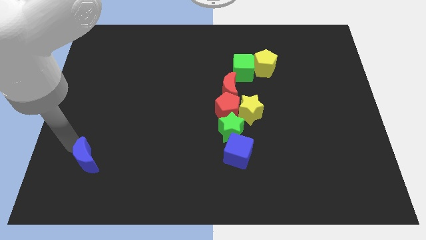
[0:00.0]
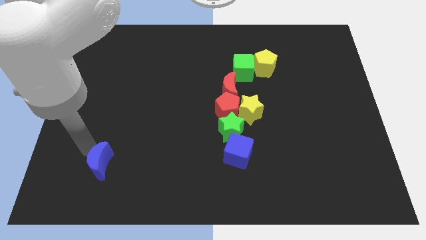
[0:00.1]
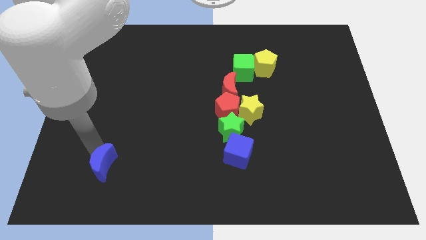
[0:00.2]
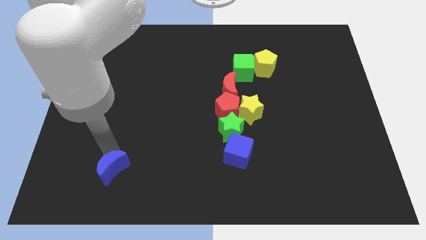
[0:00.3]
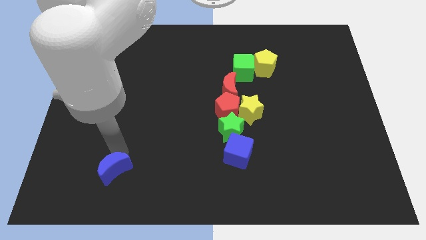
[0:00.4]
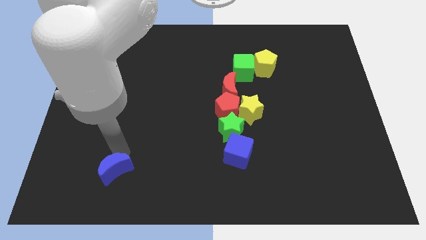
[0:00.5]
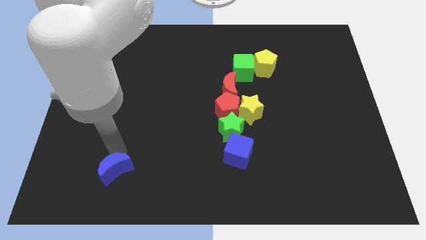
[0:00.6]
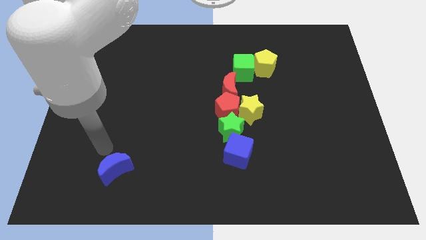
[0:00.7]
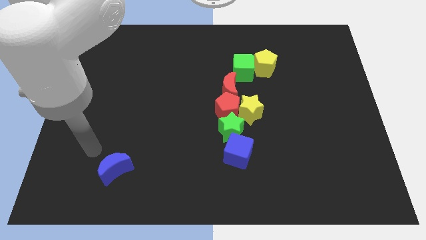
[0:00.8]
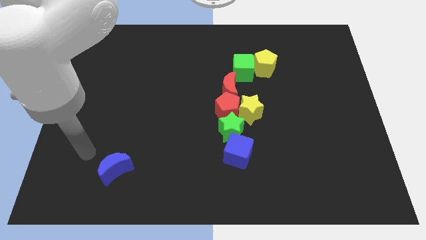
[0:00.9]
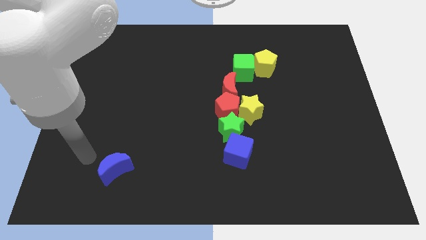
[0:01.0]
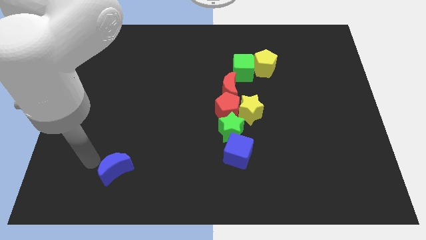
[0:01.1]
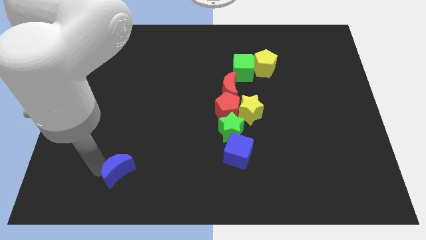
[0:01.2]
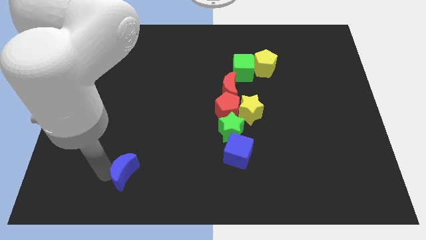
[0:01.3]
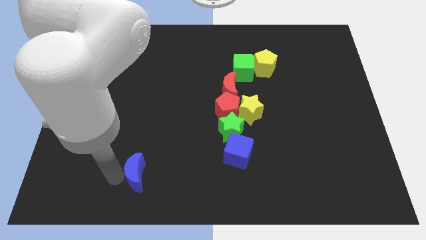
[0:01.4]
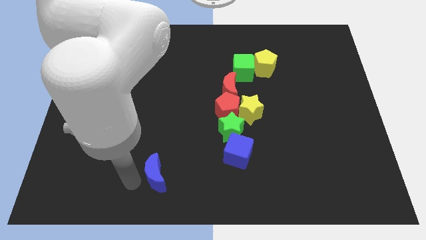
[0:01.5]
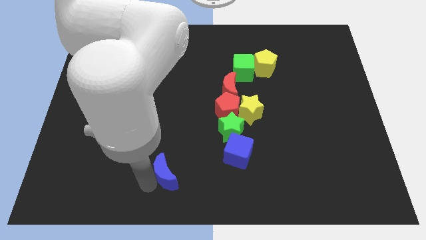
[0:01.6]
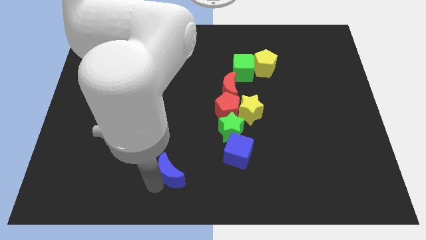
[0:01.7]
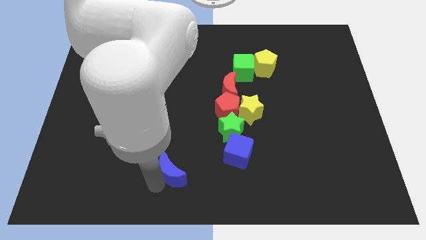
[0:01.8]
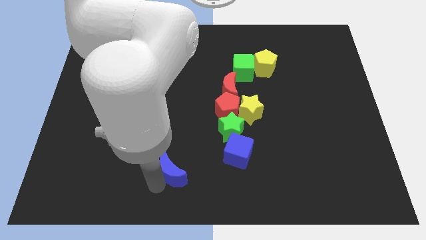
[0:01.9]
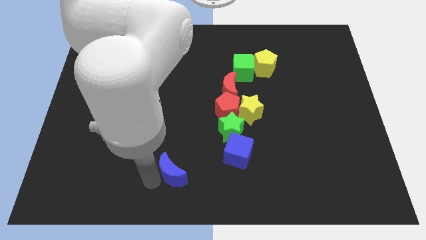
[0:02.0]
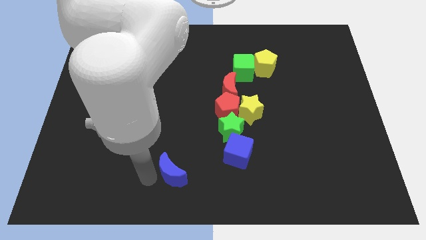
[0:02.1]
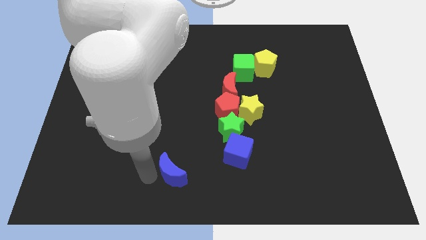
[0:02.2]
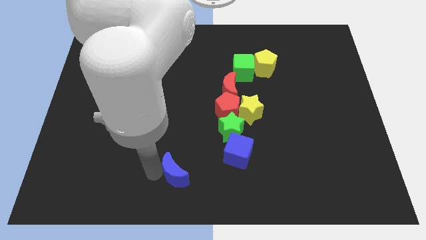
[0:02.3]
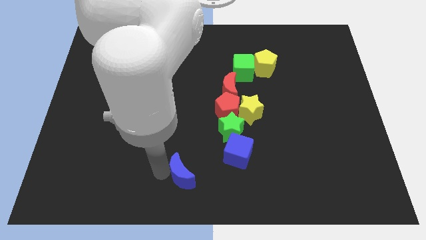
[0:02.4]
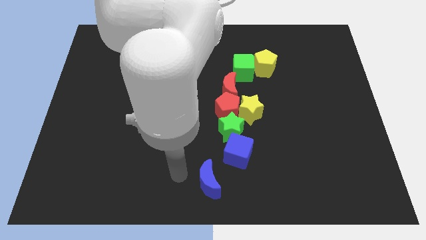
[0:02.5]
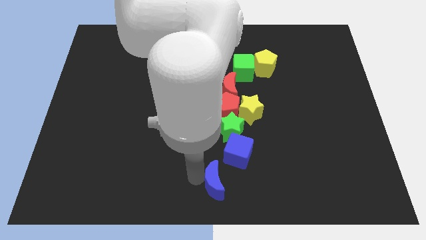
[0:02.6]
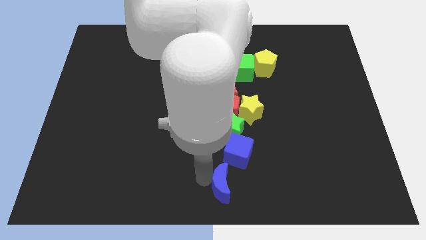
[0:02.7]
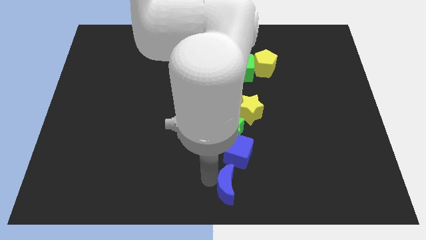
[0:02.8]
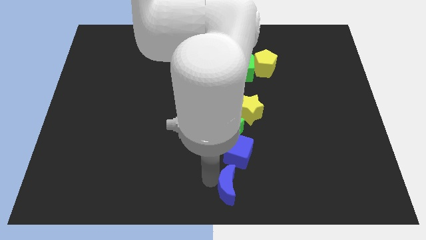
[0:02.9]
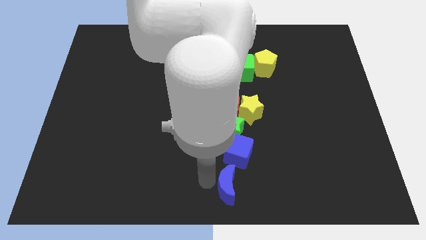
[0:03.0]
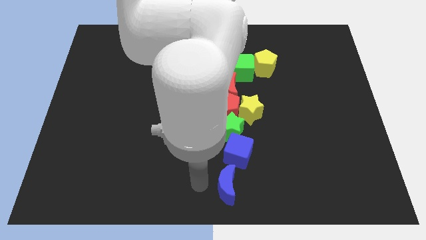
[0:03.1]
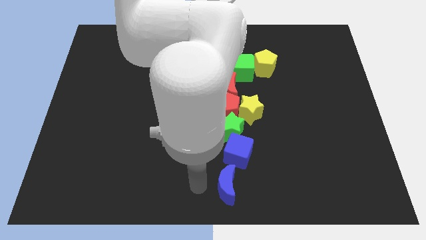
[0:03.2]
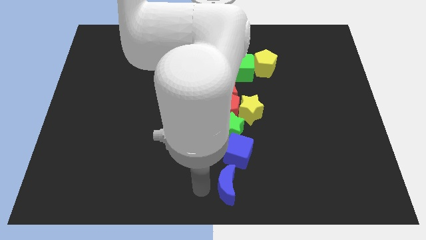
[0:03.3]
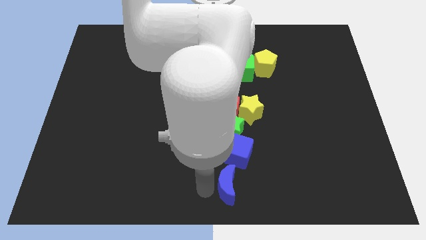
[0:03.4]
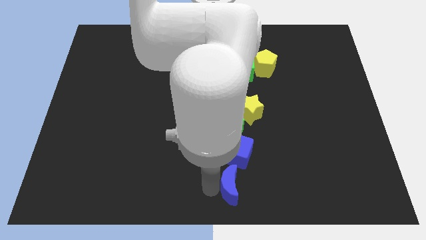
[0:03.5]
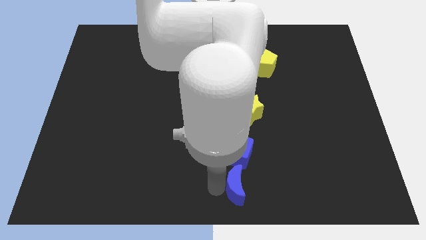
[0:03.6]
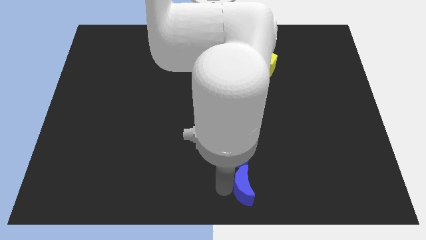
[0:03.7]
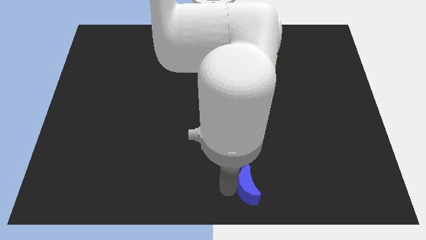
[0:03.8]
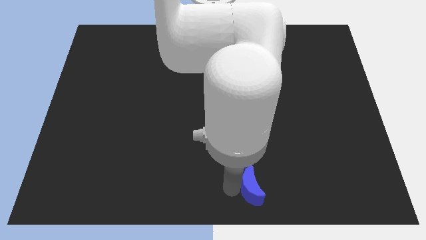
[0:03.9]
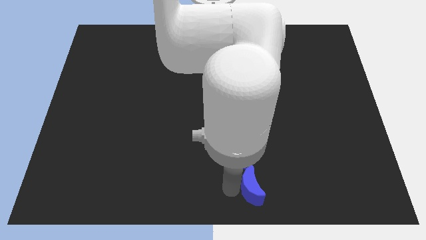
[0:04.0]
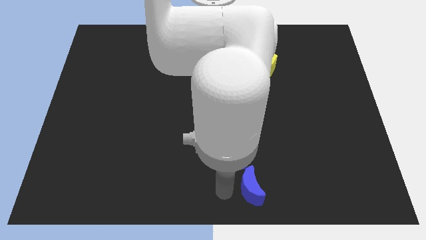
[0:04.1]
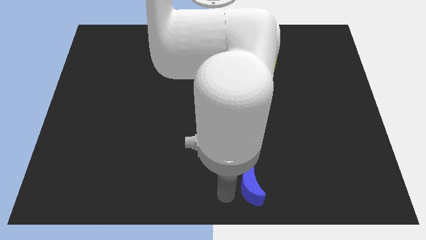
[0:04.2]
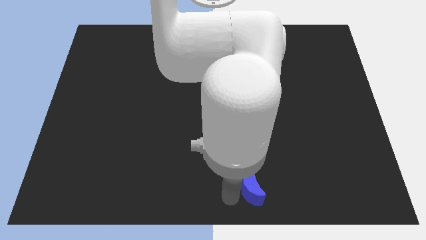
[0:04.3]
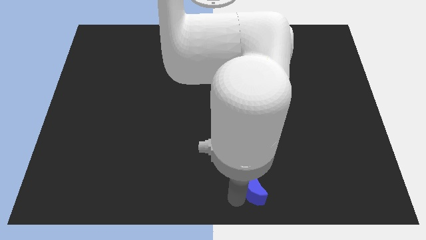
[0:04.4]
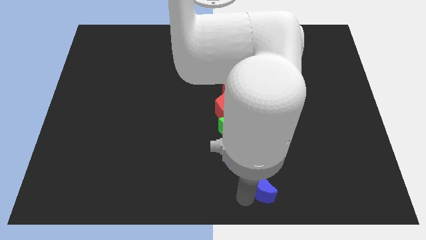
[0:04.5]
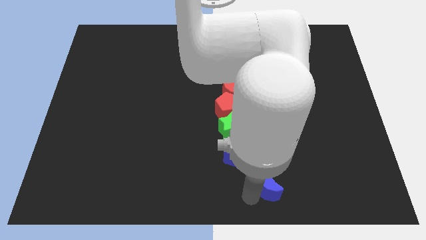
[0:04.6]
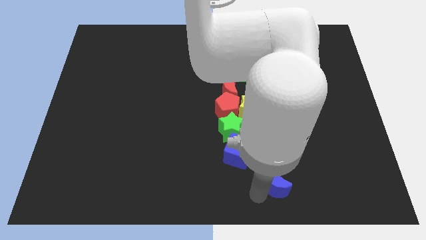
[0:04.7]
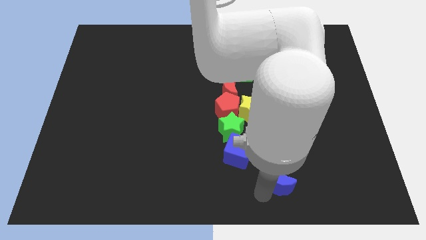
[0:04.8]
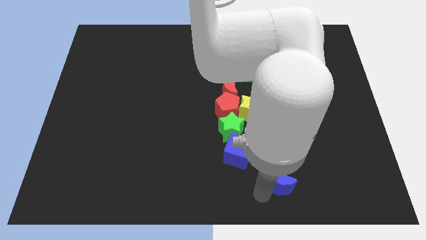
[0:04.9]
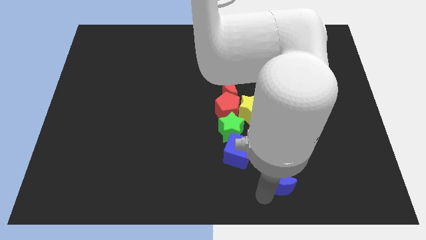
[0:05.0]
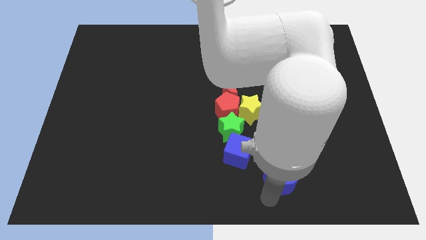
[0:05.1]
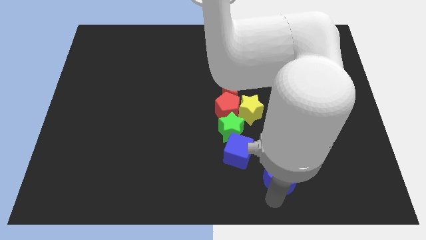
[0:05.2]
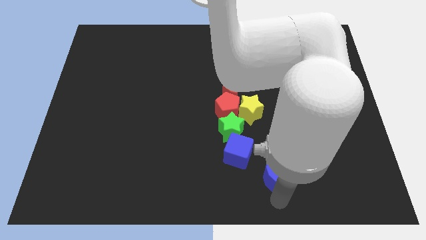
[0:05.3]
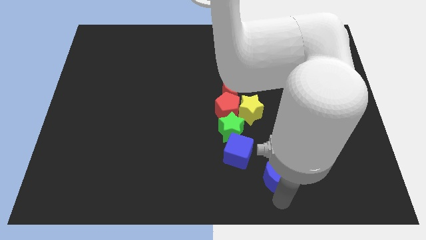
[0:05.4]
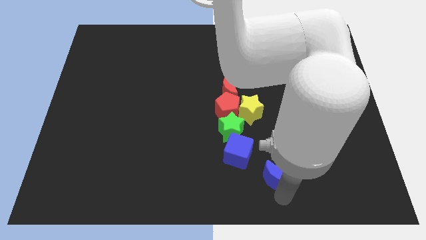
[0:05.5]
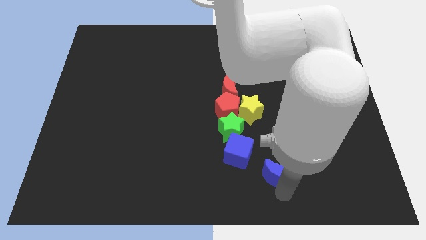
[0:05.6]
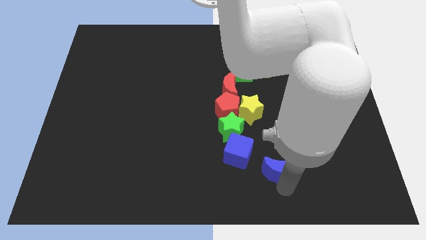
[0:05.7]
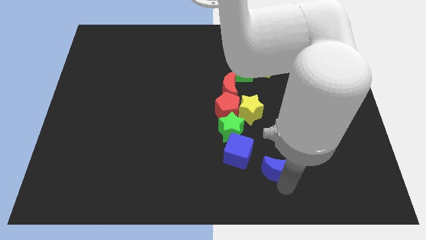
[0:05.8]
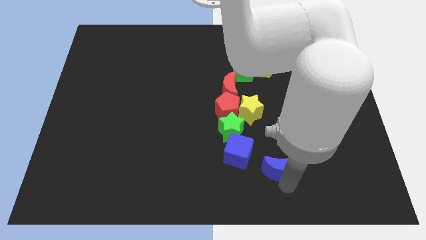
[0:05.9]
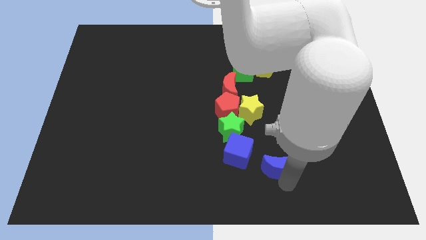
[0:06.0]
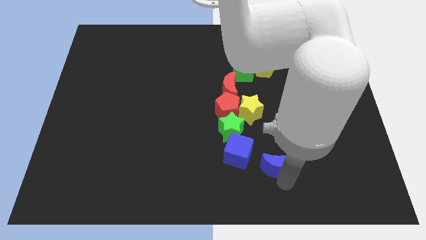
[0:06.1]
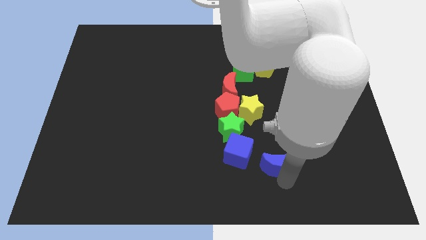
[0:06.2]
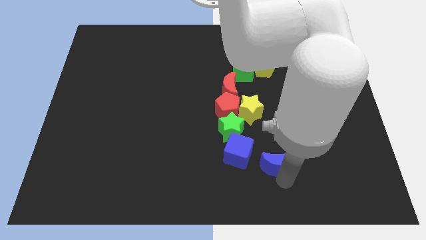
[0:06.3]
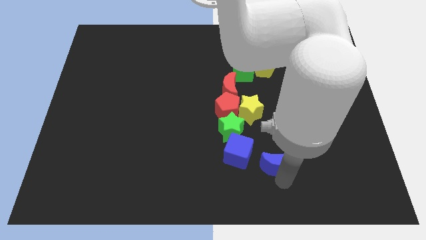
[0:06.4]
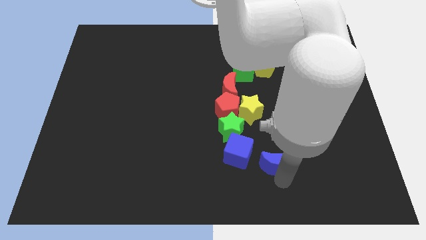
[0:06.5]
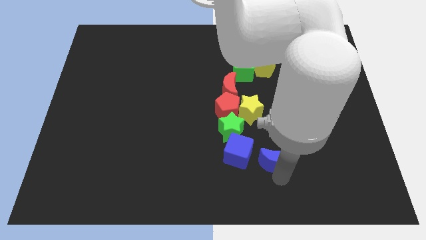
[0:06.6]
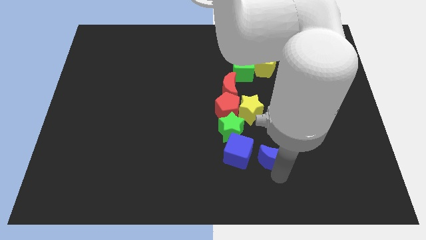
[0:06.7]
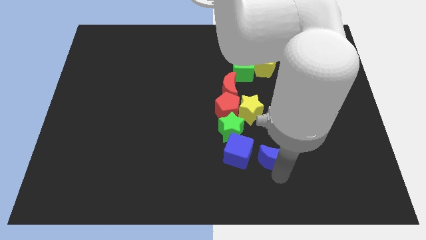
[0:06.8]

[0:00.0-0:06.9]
move blue crescent towards right side of blue cube

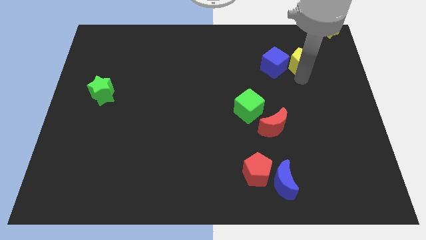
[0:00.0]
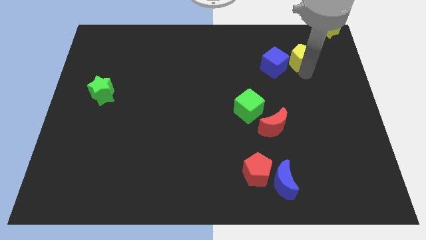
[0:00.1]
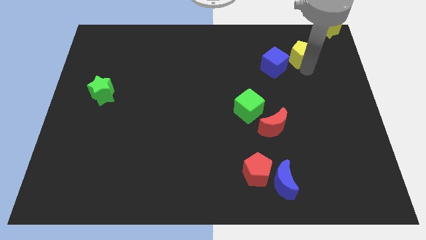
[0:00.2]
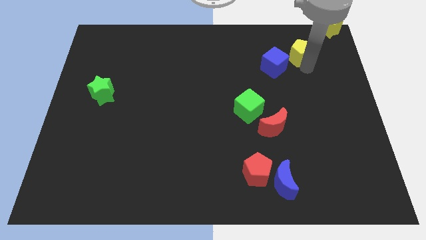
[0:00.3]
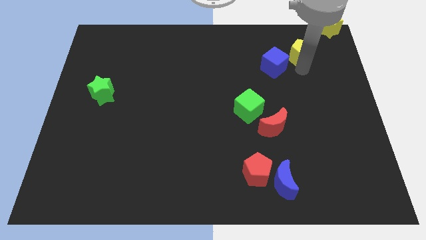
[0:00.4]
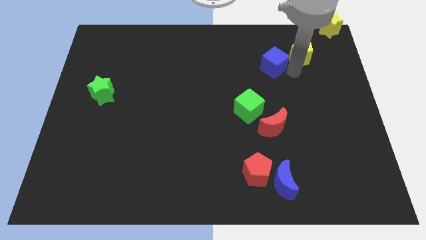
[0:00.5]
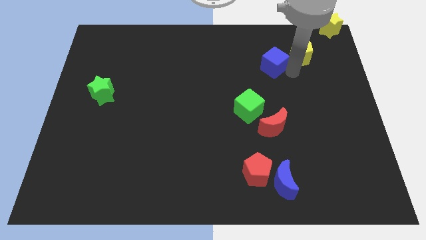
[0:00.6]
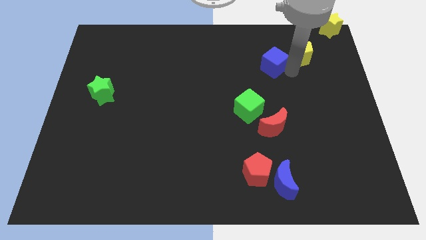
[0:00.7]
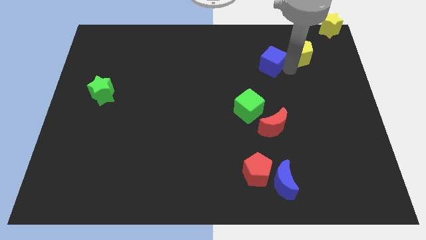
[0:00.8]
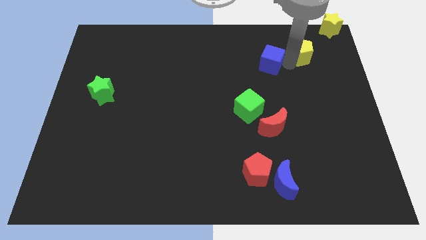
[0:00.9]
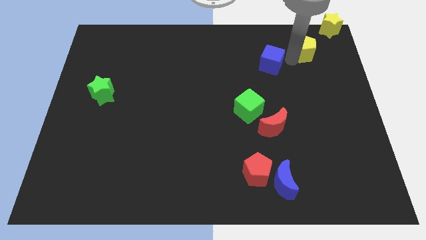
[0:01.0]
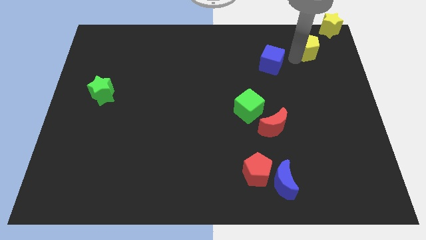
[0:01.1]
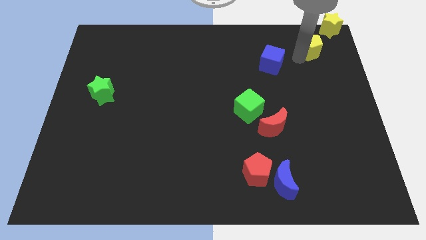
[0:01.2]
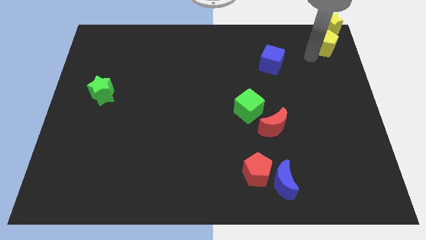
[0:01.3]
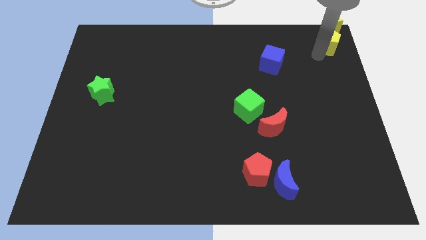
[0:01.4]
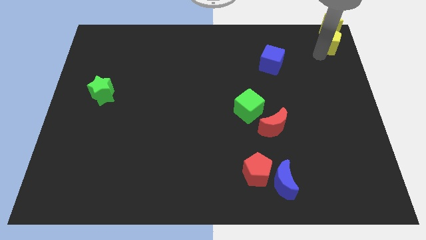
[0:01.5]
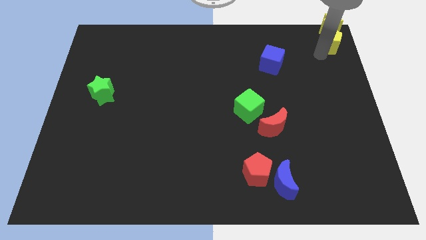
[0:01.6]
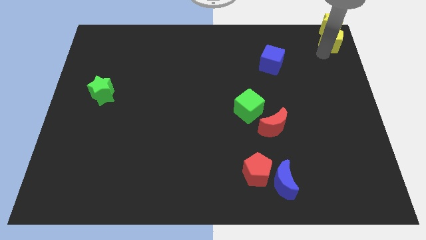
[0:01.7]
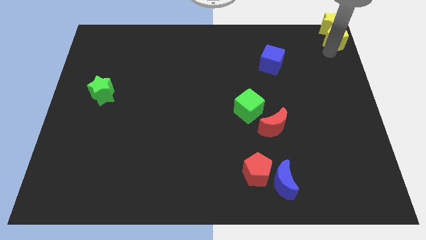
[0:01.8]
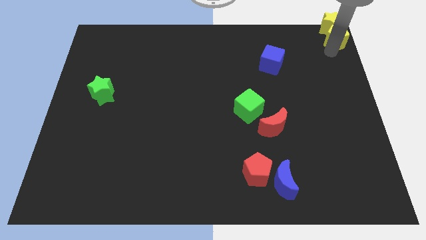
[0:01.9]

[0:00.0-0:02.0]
separate the yellow pentagon towards the right top
